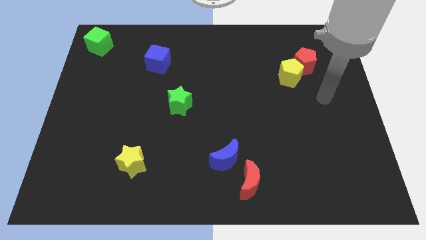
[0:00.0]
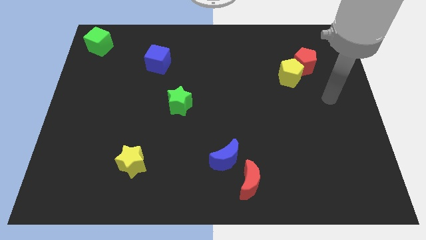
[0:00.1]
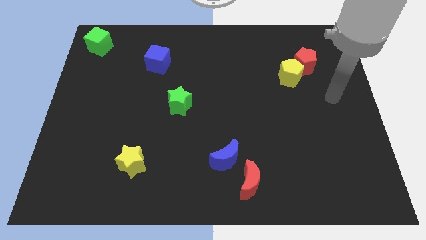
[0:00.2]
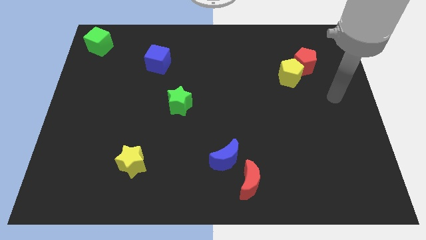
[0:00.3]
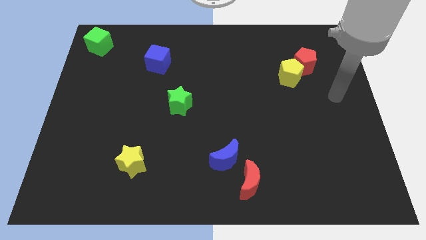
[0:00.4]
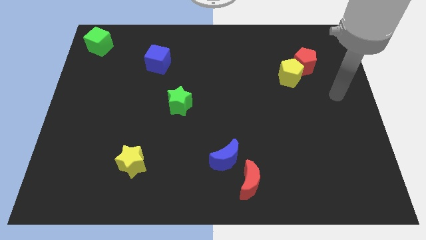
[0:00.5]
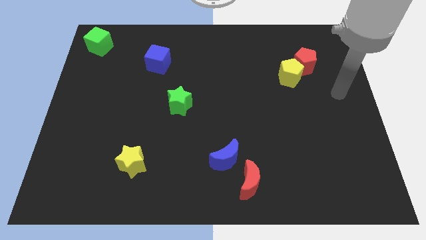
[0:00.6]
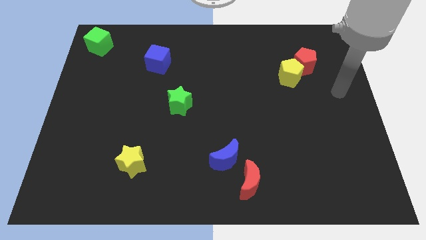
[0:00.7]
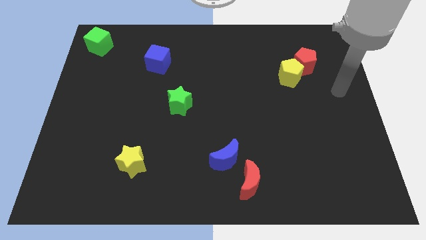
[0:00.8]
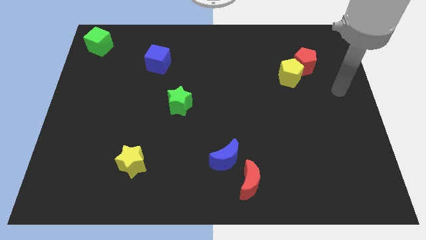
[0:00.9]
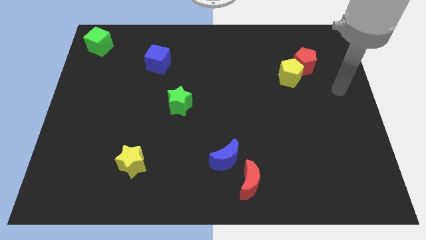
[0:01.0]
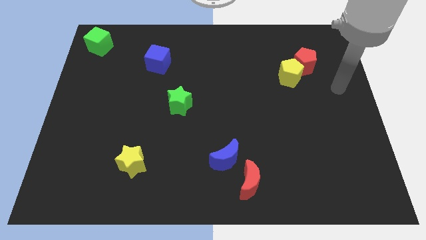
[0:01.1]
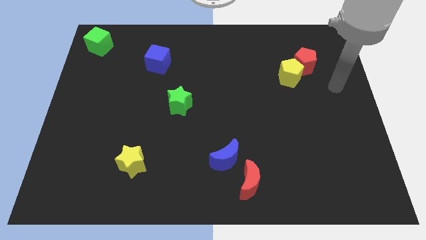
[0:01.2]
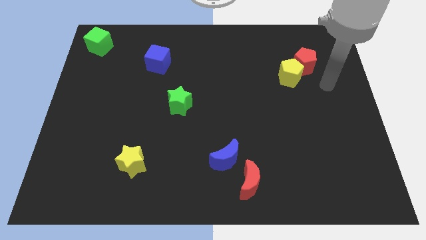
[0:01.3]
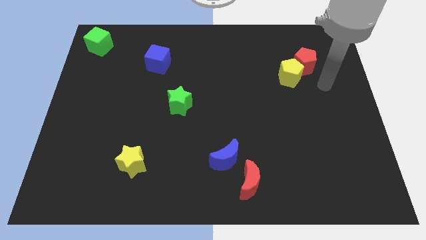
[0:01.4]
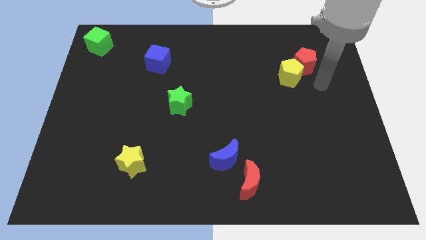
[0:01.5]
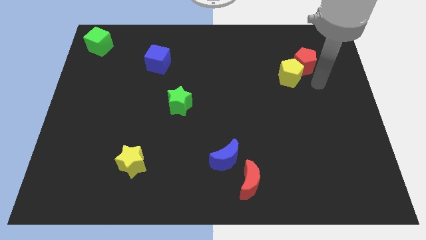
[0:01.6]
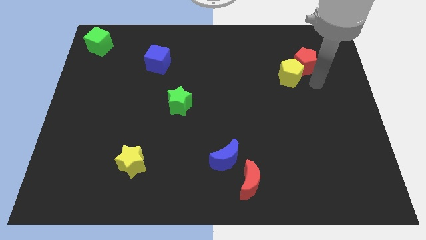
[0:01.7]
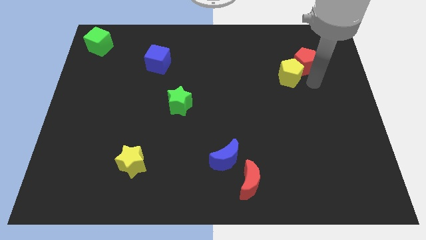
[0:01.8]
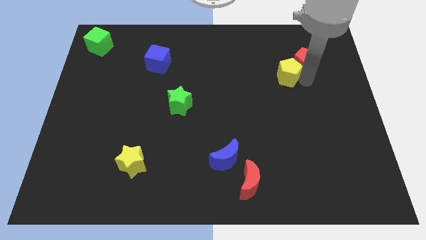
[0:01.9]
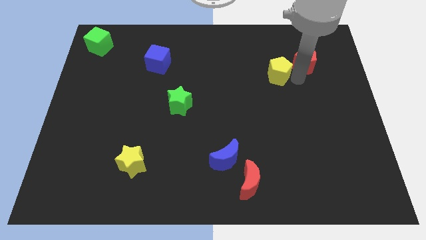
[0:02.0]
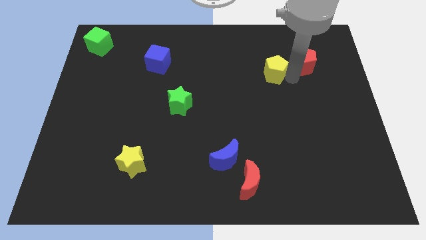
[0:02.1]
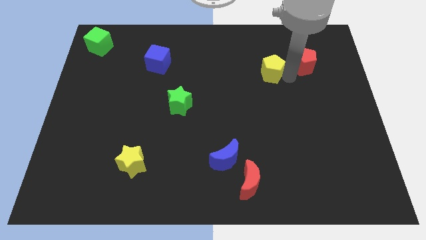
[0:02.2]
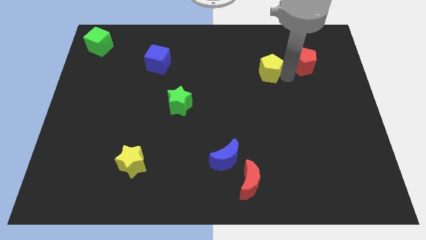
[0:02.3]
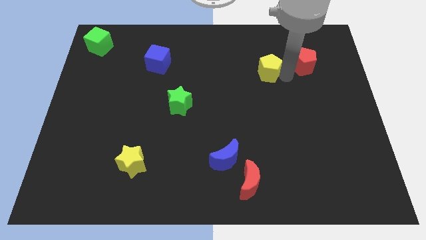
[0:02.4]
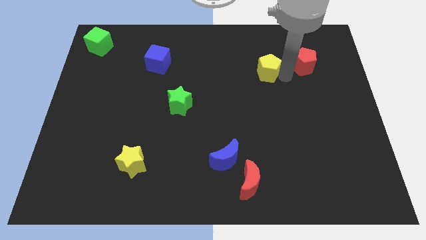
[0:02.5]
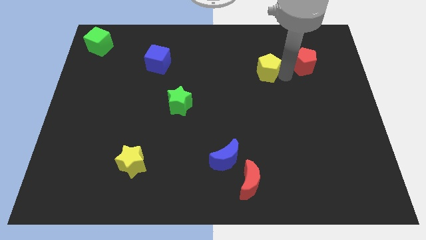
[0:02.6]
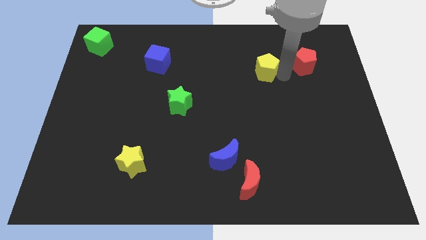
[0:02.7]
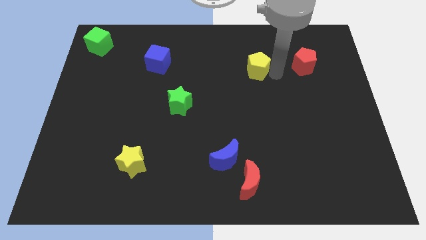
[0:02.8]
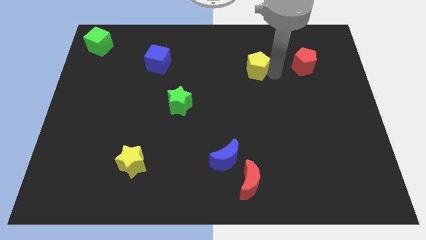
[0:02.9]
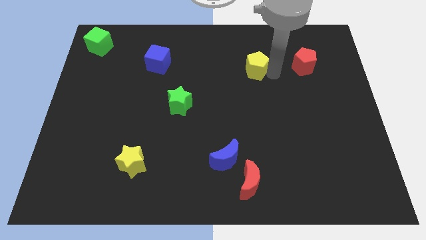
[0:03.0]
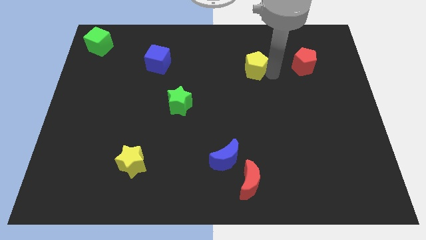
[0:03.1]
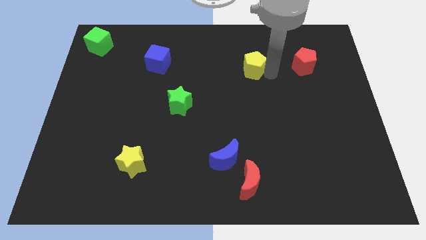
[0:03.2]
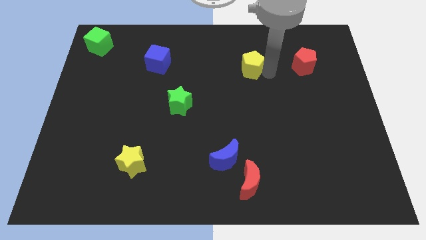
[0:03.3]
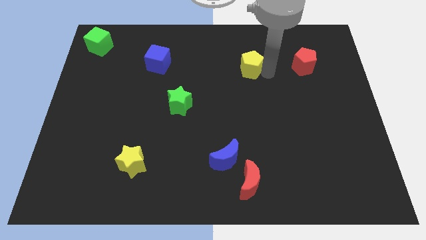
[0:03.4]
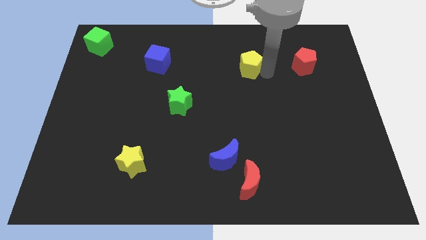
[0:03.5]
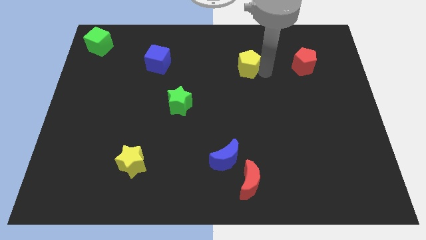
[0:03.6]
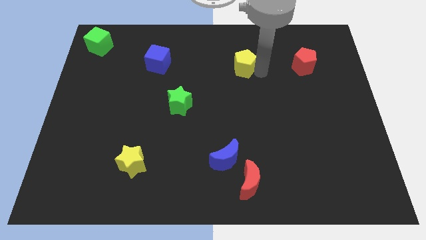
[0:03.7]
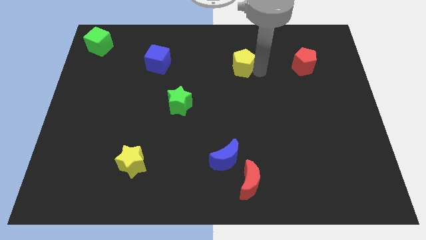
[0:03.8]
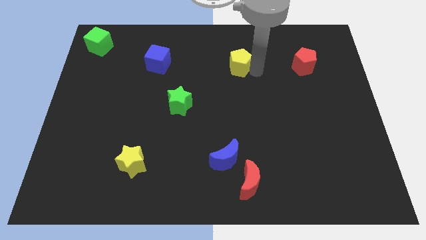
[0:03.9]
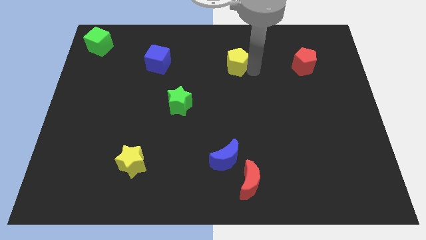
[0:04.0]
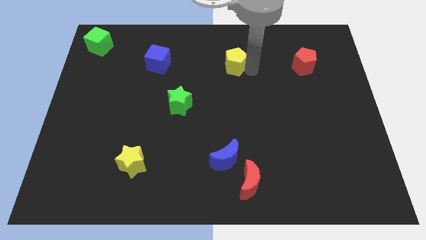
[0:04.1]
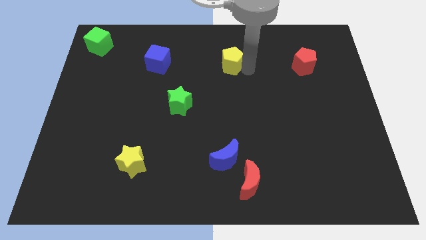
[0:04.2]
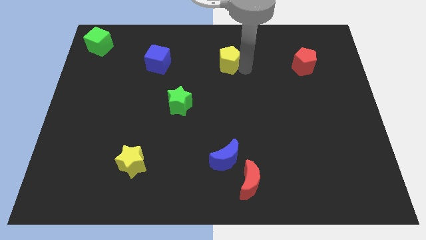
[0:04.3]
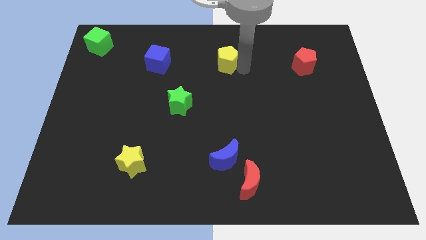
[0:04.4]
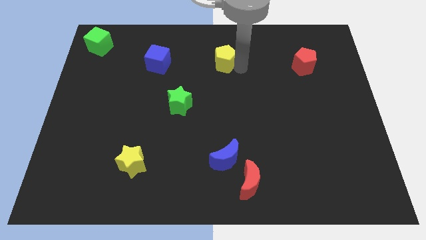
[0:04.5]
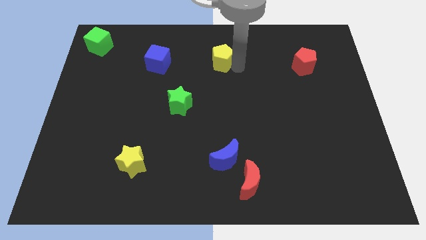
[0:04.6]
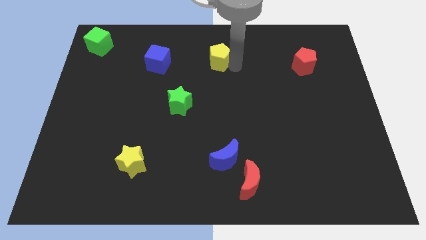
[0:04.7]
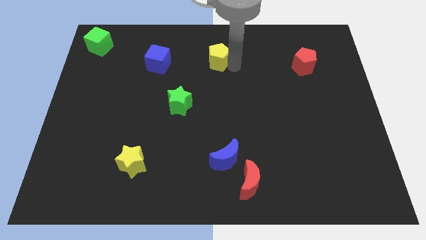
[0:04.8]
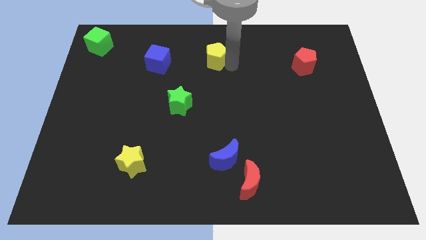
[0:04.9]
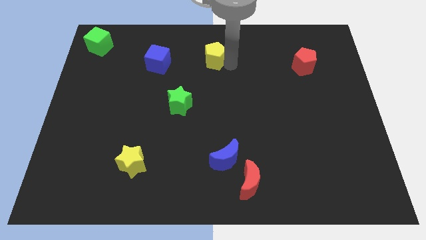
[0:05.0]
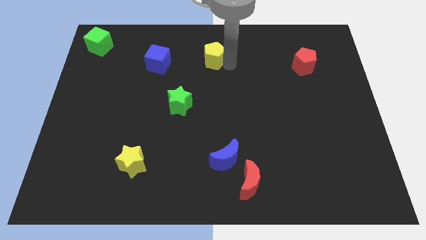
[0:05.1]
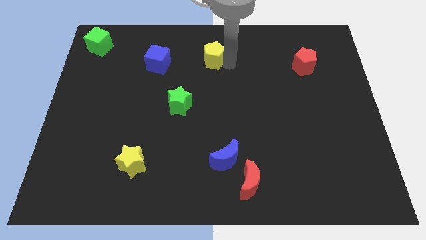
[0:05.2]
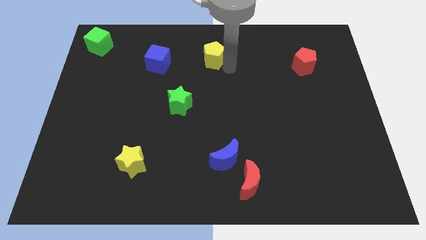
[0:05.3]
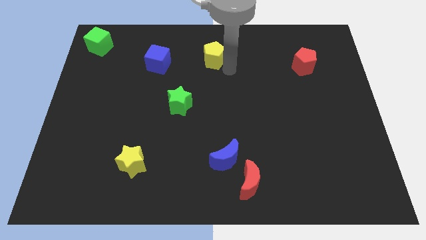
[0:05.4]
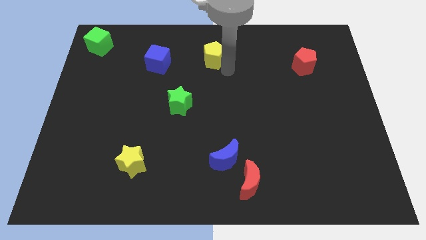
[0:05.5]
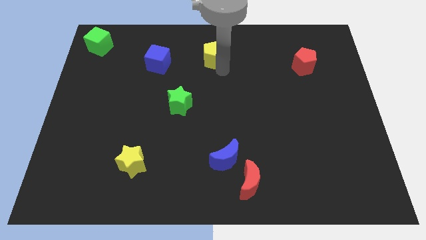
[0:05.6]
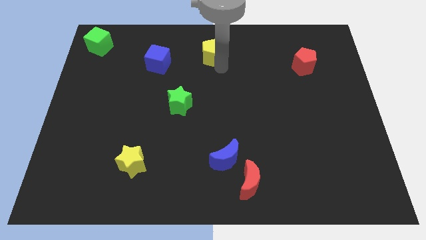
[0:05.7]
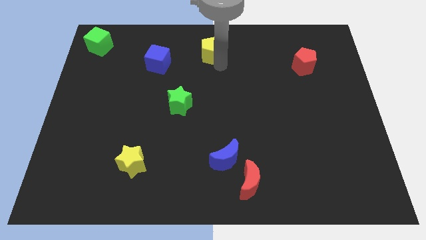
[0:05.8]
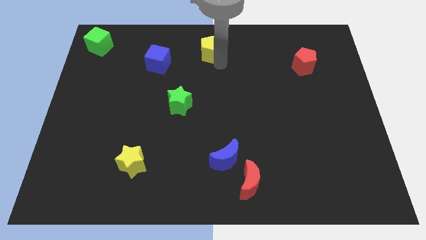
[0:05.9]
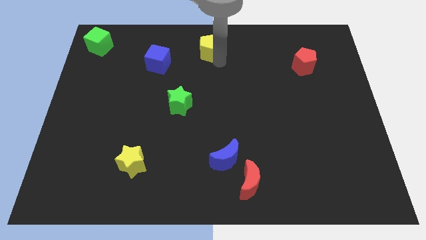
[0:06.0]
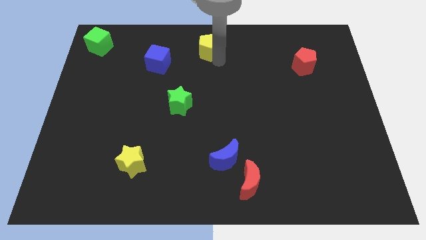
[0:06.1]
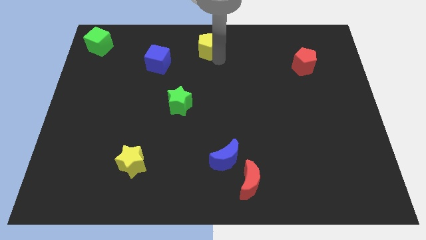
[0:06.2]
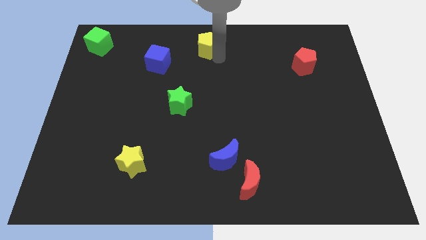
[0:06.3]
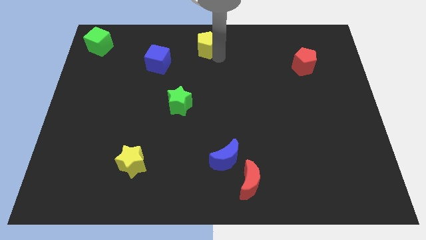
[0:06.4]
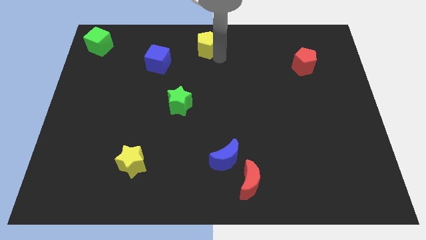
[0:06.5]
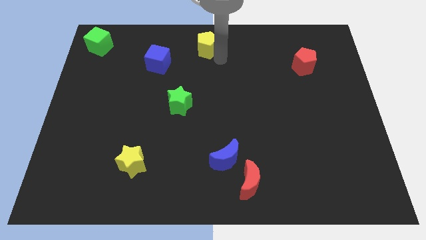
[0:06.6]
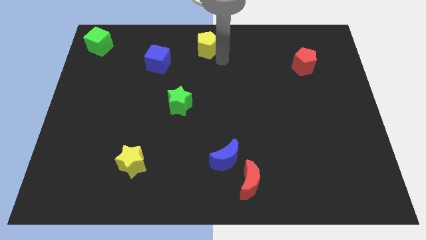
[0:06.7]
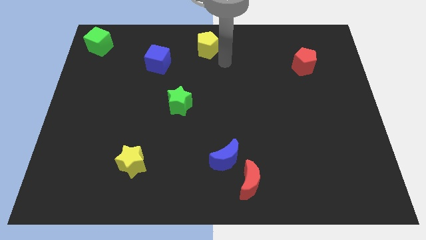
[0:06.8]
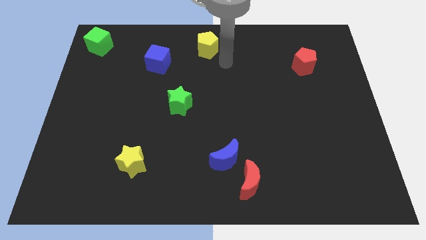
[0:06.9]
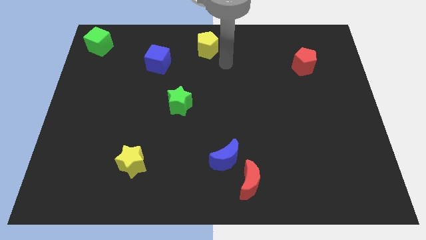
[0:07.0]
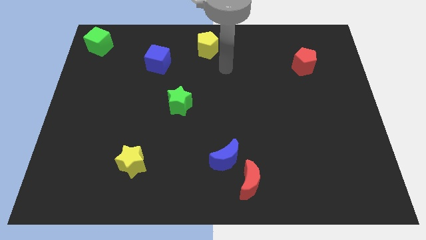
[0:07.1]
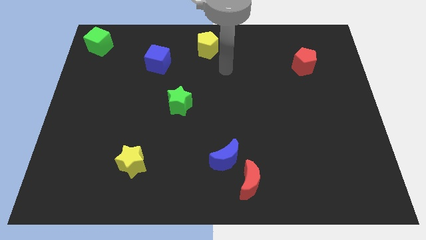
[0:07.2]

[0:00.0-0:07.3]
push the yellow pentagon upward

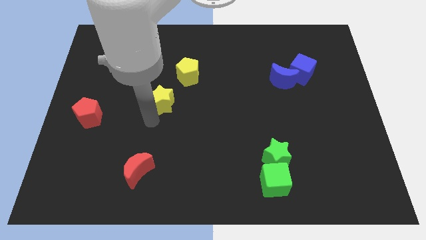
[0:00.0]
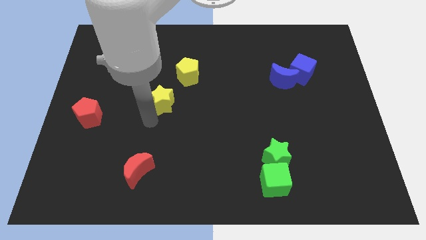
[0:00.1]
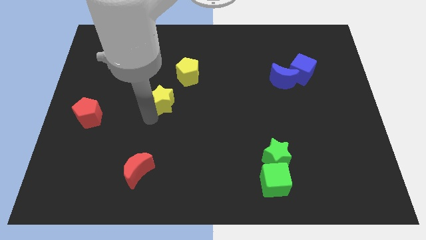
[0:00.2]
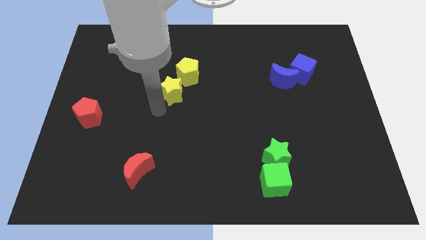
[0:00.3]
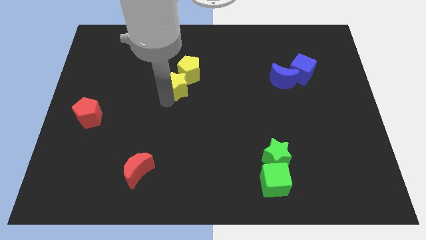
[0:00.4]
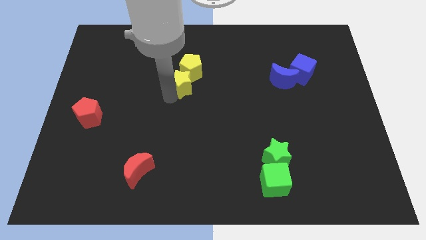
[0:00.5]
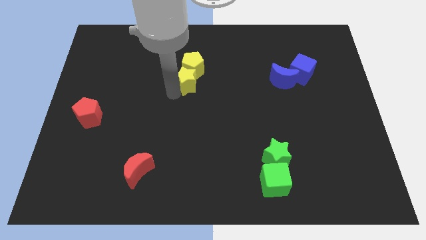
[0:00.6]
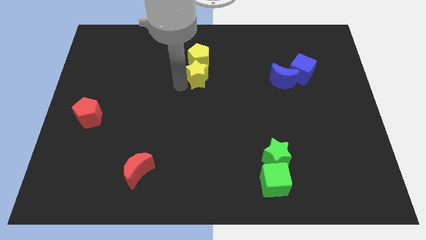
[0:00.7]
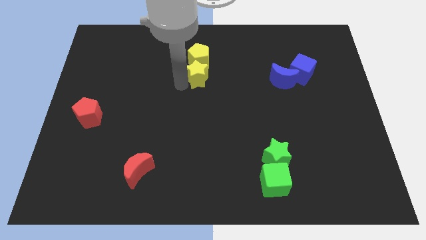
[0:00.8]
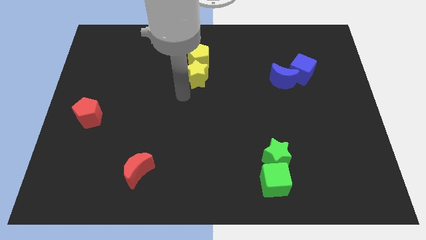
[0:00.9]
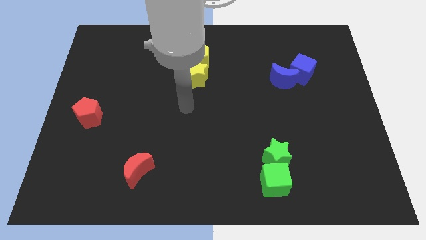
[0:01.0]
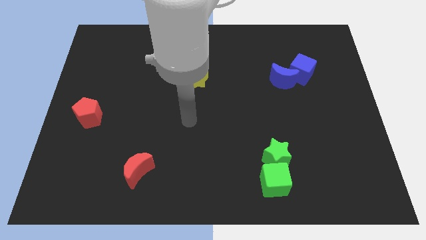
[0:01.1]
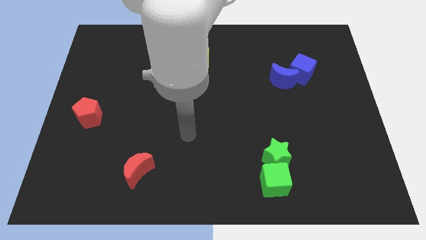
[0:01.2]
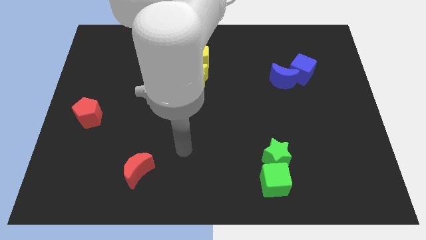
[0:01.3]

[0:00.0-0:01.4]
push yellow star into the yellow pentagon

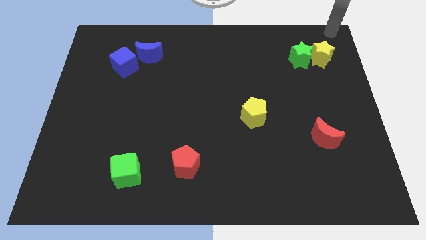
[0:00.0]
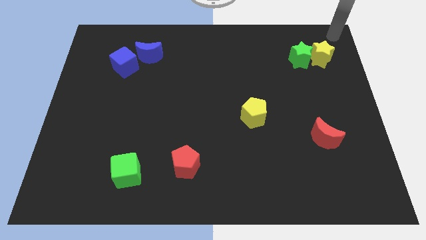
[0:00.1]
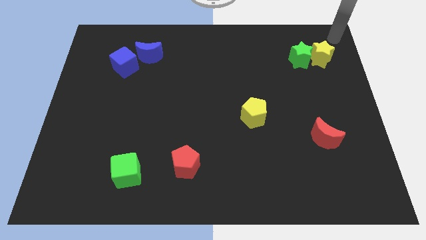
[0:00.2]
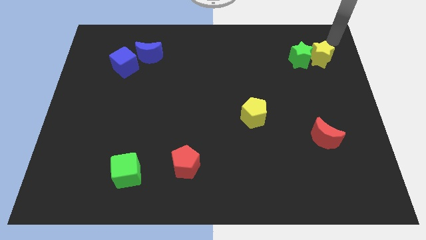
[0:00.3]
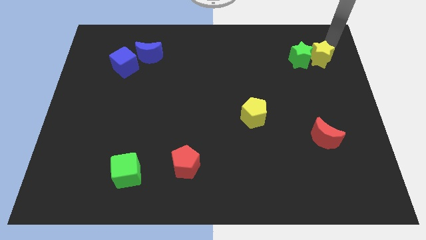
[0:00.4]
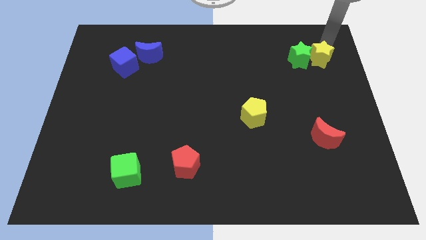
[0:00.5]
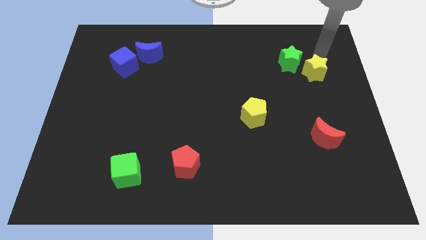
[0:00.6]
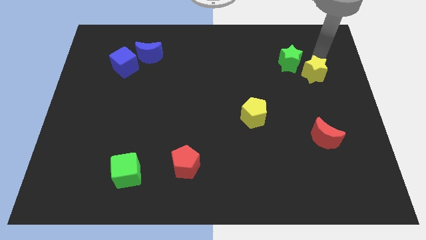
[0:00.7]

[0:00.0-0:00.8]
tap yellow star on top
